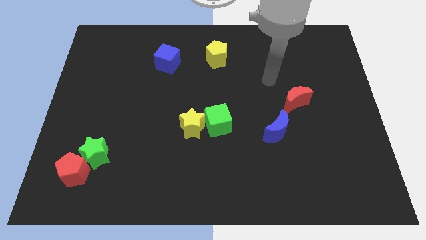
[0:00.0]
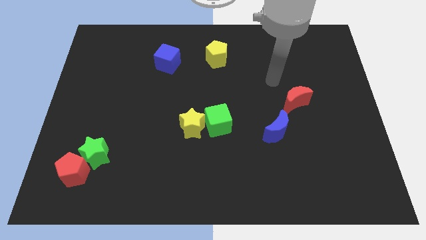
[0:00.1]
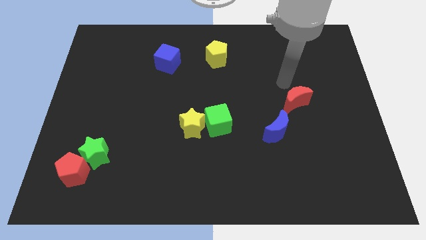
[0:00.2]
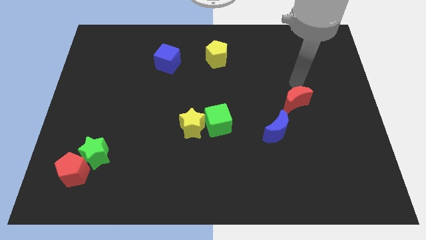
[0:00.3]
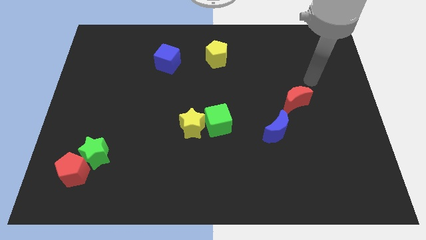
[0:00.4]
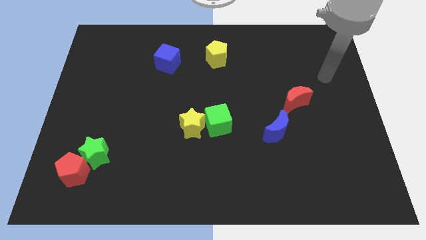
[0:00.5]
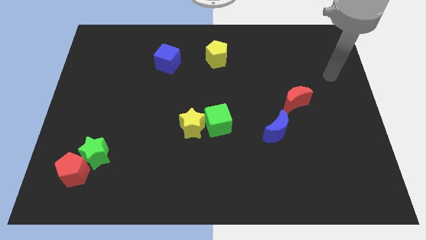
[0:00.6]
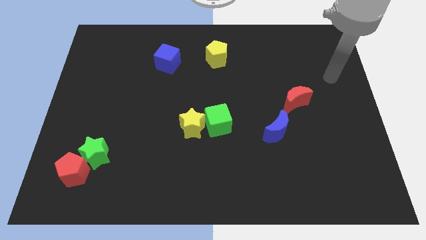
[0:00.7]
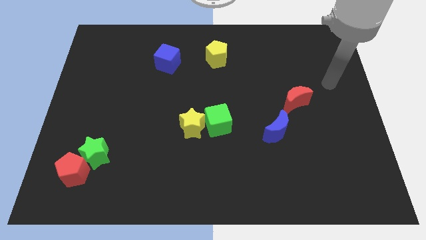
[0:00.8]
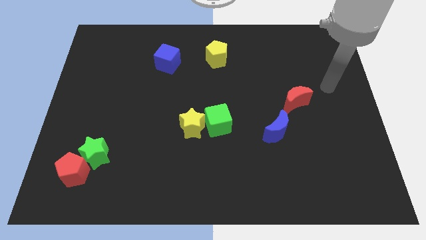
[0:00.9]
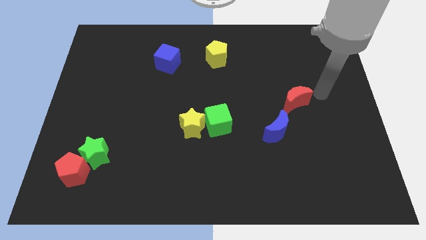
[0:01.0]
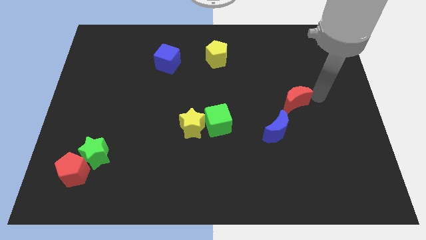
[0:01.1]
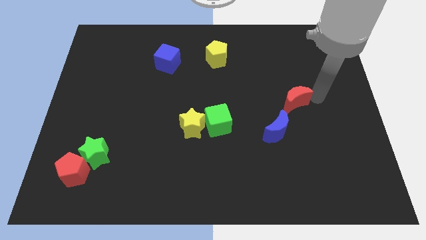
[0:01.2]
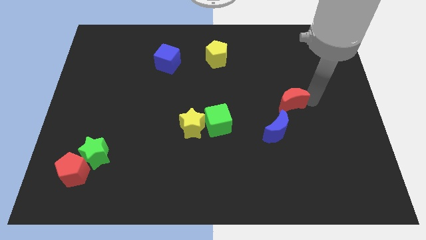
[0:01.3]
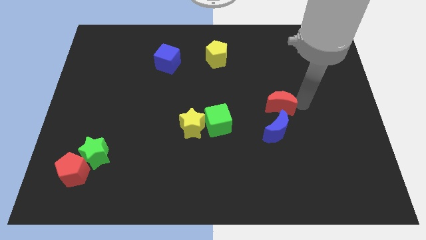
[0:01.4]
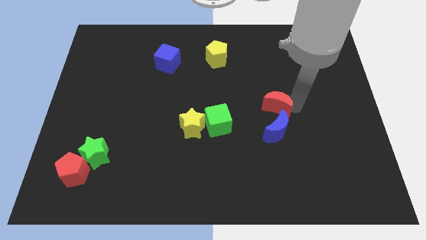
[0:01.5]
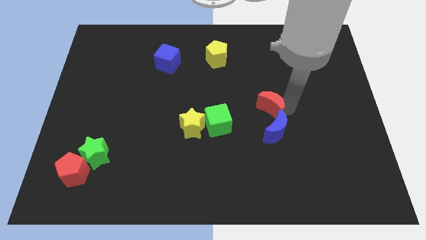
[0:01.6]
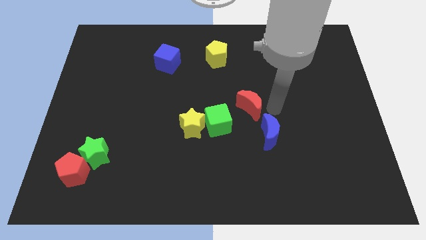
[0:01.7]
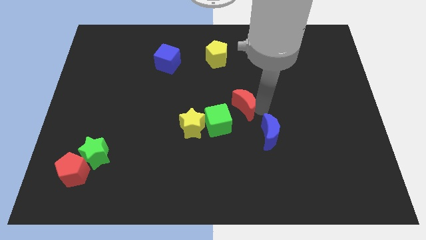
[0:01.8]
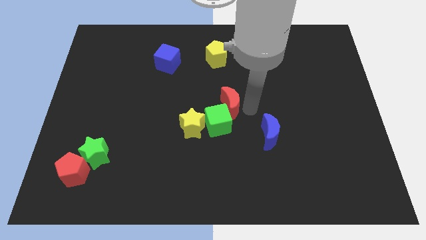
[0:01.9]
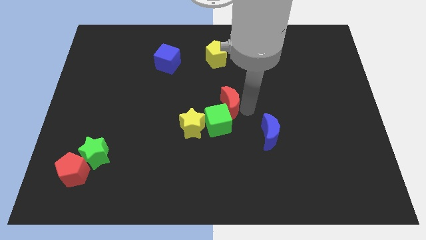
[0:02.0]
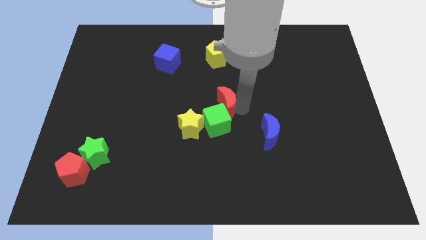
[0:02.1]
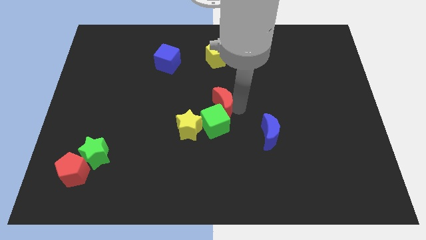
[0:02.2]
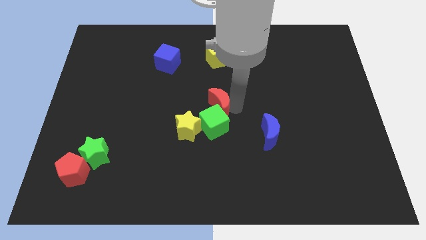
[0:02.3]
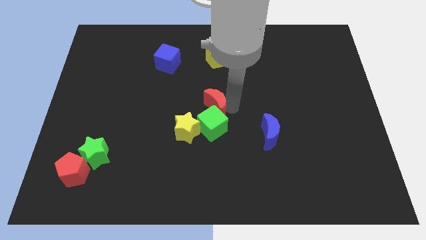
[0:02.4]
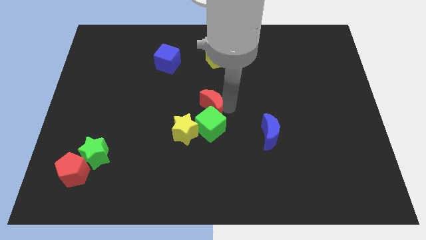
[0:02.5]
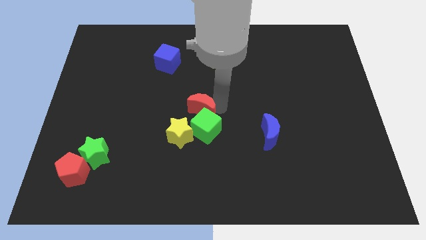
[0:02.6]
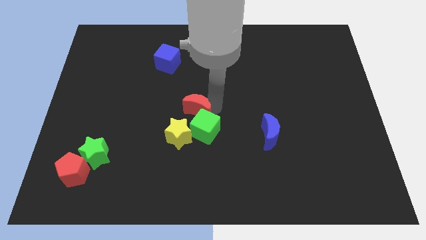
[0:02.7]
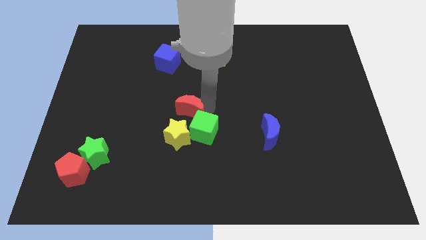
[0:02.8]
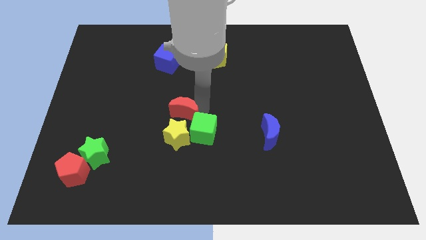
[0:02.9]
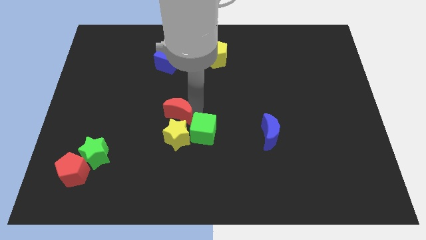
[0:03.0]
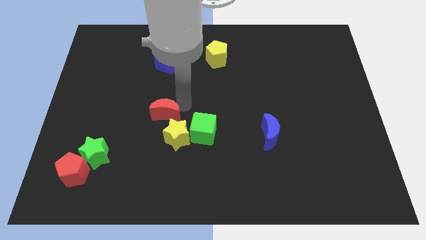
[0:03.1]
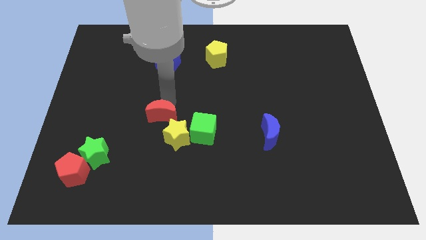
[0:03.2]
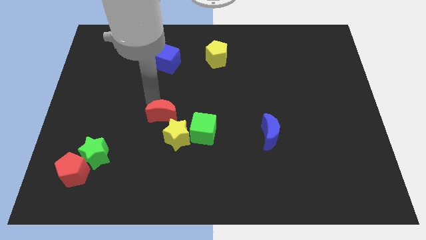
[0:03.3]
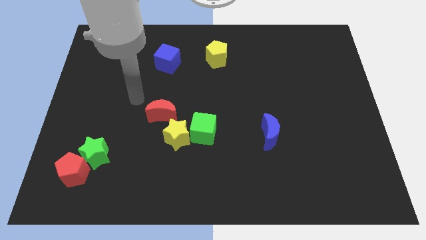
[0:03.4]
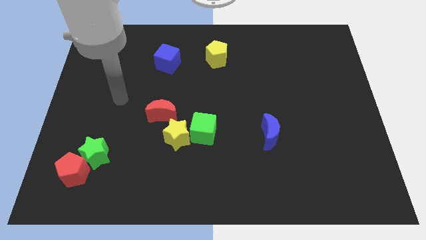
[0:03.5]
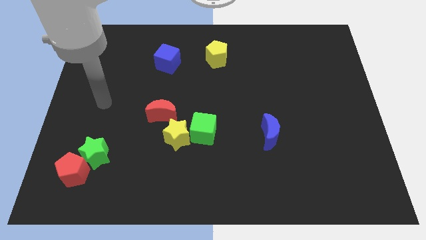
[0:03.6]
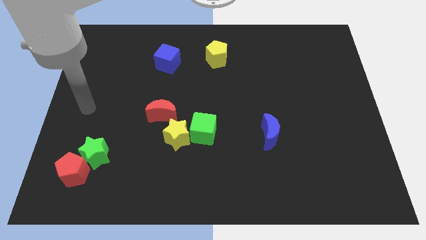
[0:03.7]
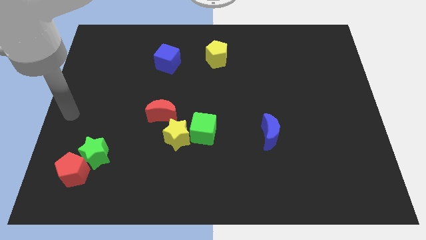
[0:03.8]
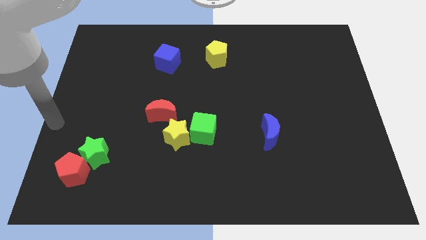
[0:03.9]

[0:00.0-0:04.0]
slide the red moon diagonally top right to green star

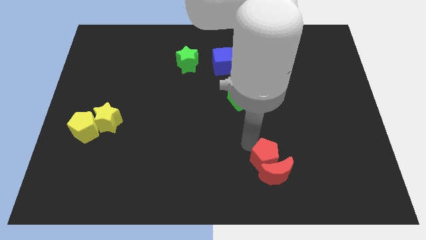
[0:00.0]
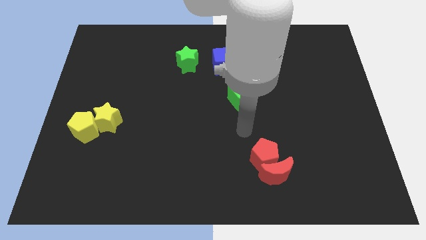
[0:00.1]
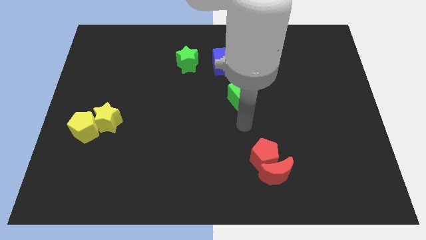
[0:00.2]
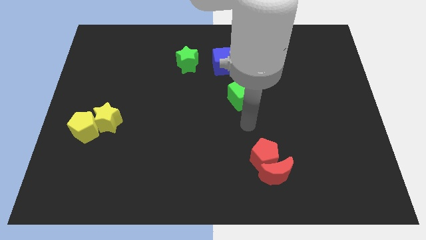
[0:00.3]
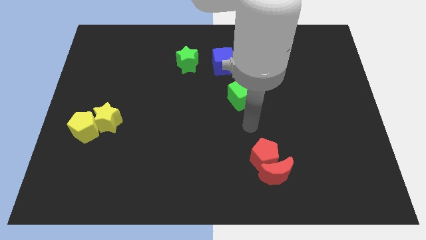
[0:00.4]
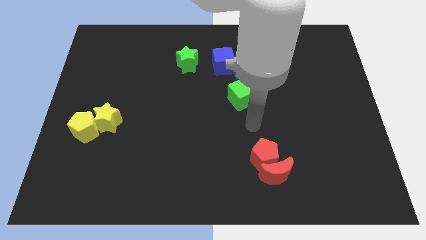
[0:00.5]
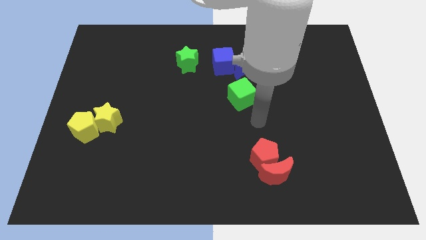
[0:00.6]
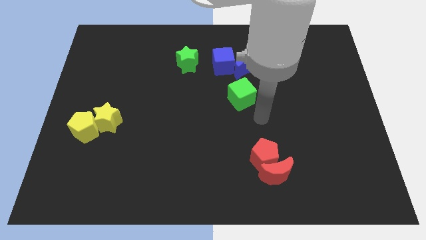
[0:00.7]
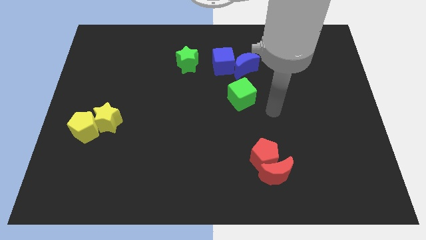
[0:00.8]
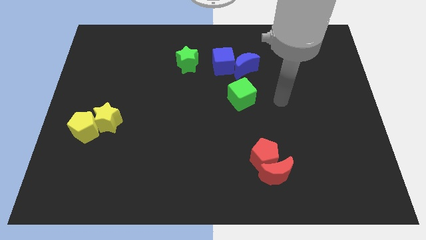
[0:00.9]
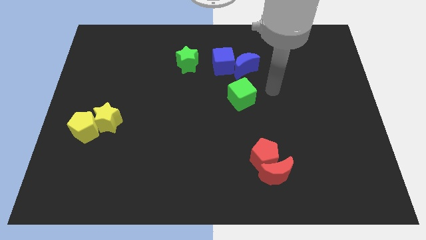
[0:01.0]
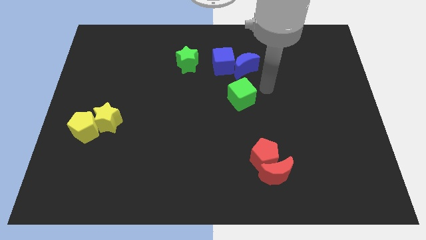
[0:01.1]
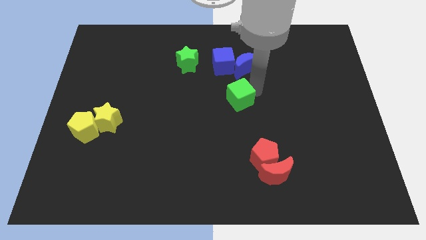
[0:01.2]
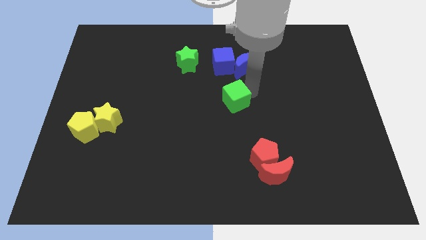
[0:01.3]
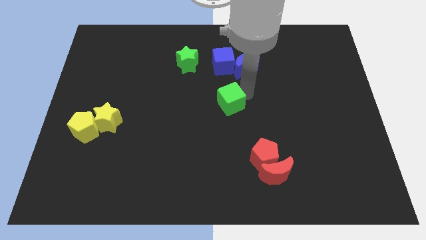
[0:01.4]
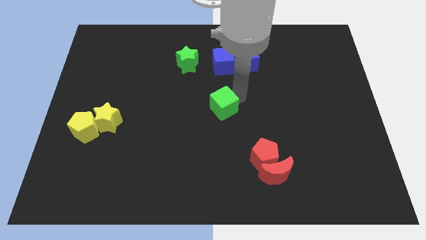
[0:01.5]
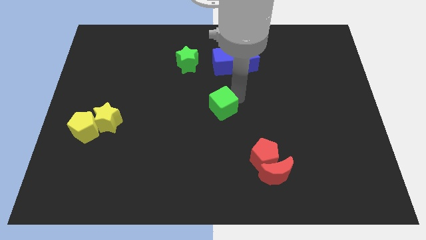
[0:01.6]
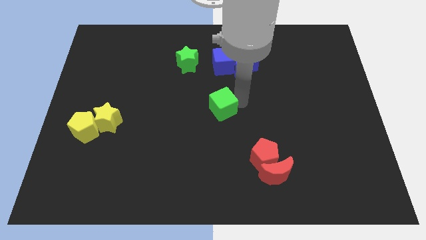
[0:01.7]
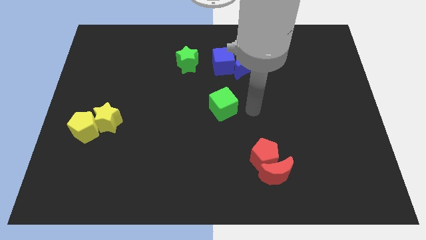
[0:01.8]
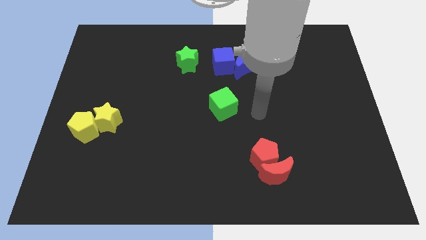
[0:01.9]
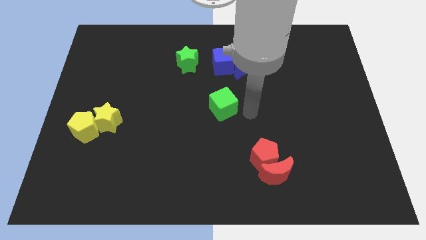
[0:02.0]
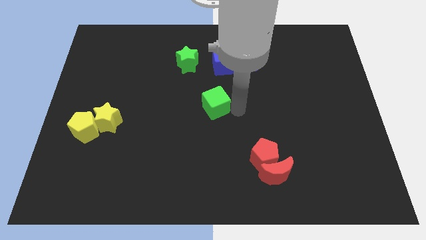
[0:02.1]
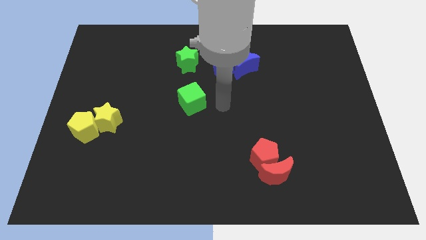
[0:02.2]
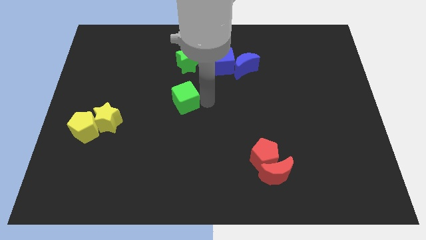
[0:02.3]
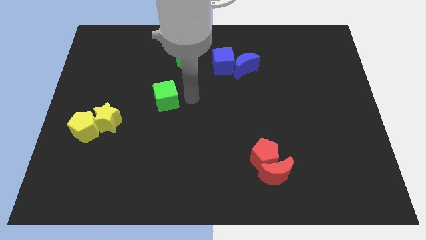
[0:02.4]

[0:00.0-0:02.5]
place the green cube below the green star

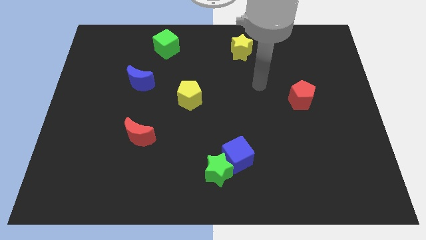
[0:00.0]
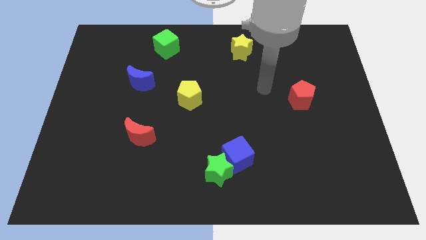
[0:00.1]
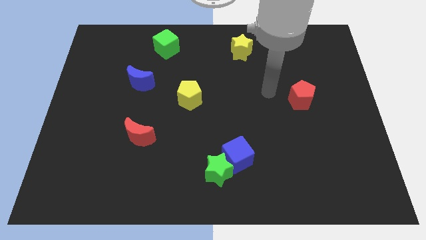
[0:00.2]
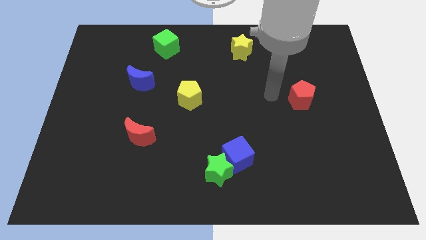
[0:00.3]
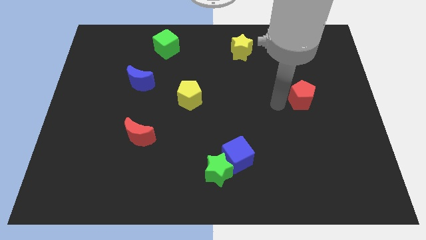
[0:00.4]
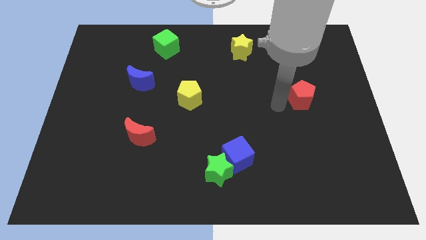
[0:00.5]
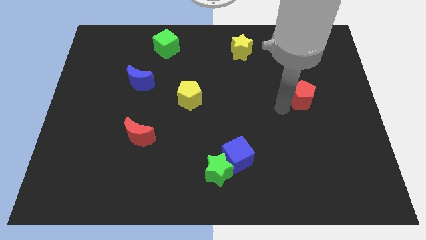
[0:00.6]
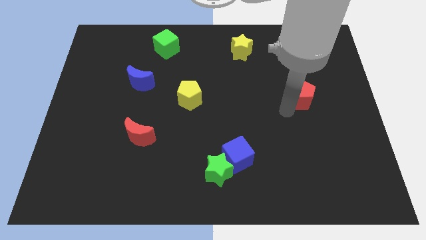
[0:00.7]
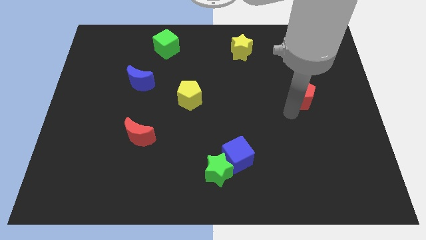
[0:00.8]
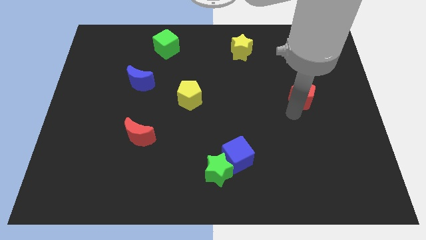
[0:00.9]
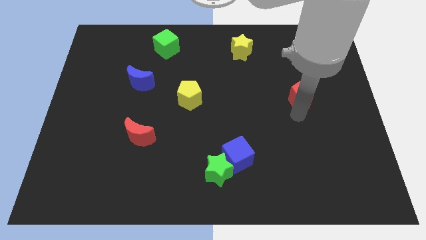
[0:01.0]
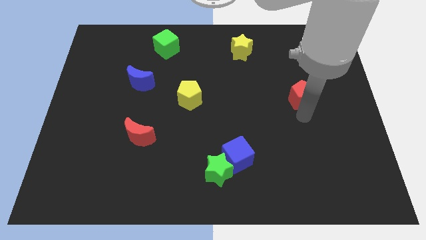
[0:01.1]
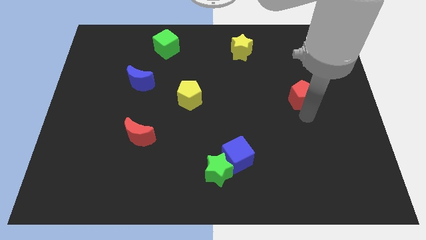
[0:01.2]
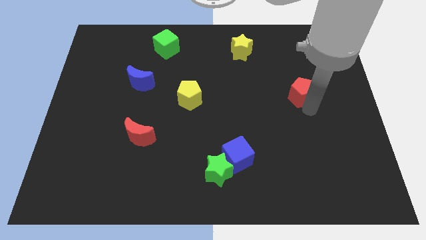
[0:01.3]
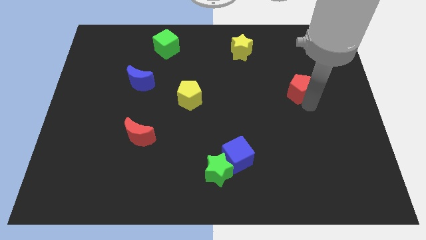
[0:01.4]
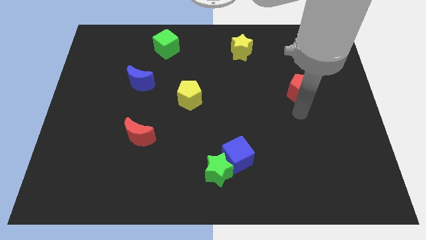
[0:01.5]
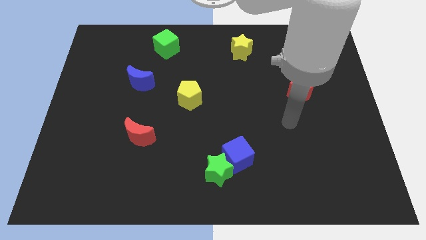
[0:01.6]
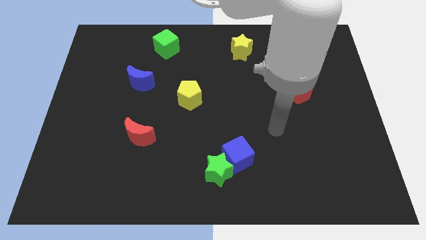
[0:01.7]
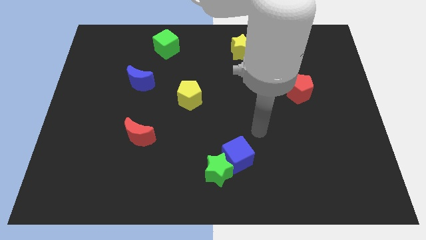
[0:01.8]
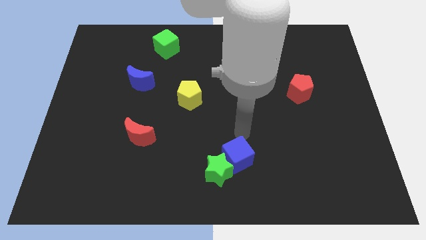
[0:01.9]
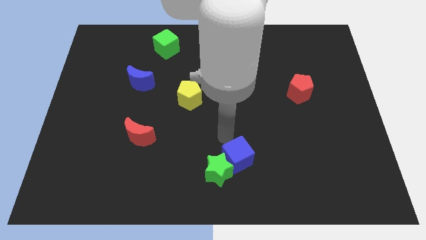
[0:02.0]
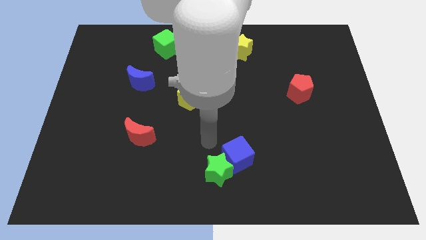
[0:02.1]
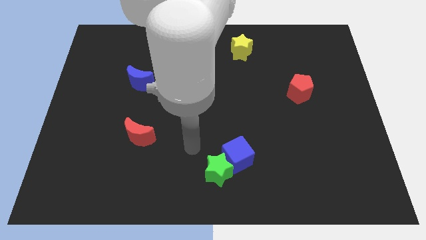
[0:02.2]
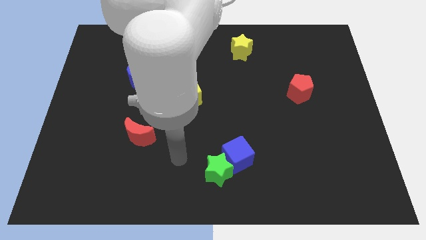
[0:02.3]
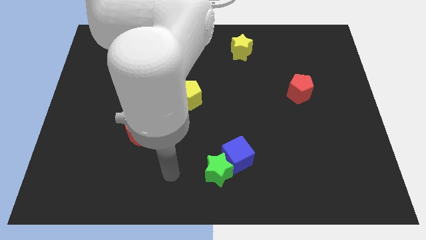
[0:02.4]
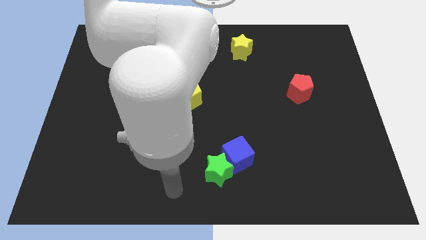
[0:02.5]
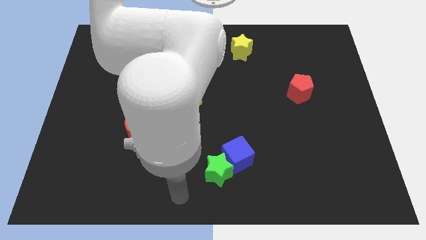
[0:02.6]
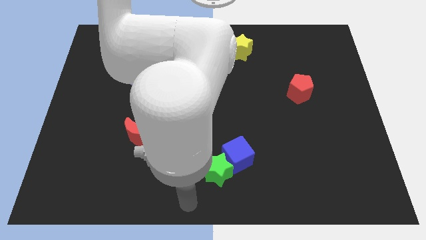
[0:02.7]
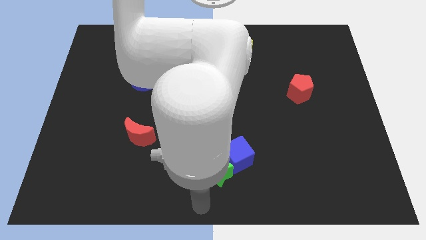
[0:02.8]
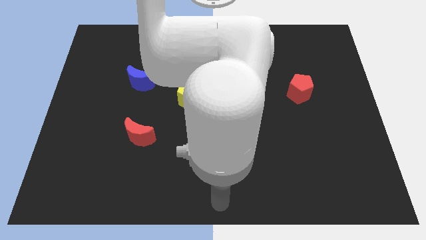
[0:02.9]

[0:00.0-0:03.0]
place the arm down to the green star
